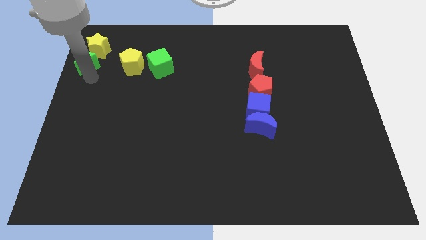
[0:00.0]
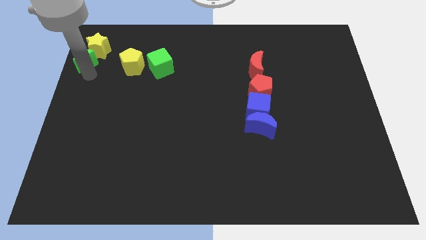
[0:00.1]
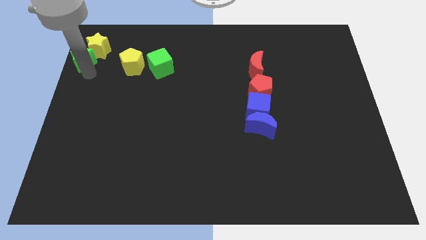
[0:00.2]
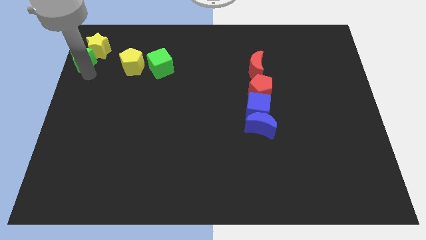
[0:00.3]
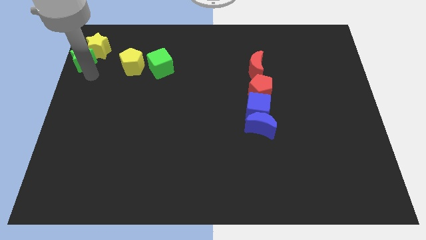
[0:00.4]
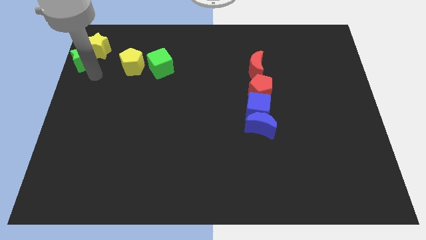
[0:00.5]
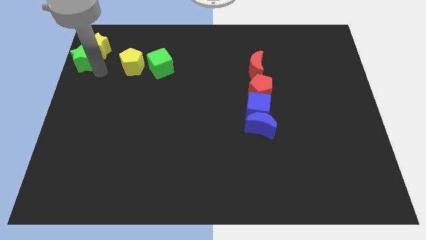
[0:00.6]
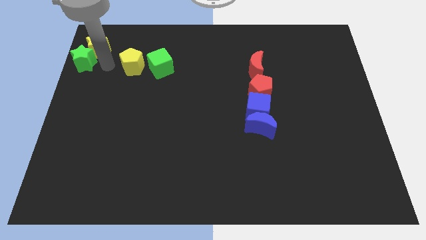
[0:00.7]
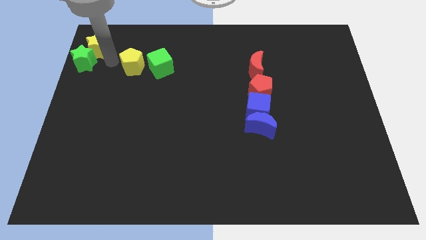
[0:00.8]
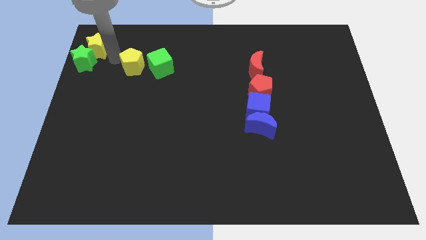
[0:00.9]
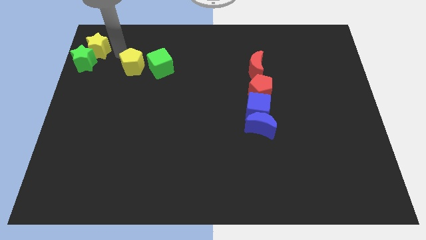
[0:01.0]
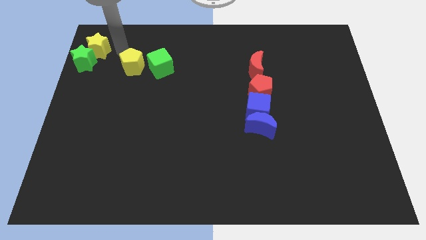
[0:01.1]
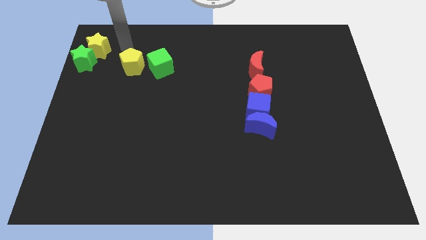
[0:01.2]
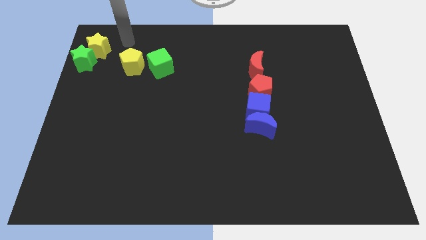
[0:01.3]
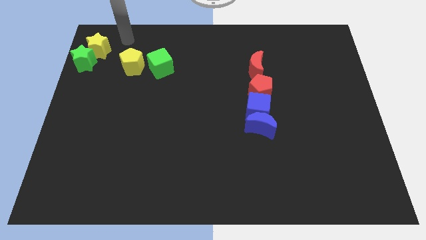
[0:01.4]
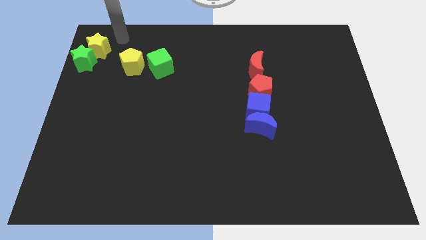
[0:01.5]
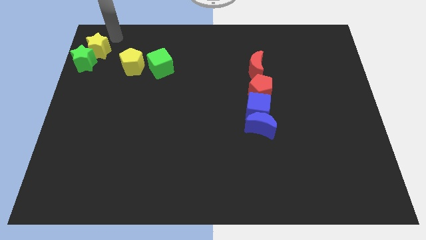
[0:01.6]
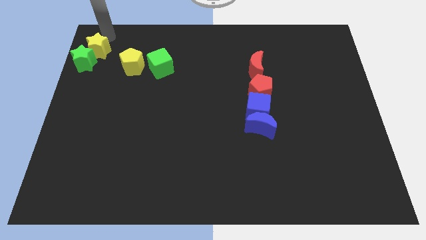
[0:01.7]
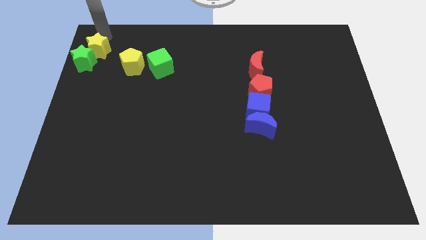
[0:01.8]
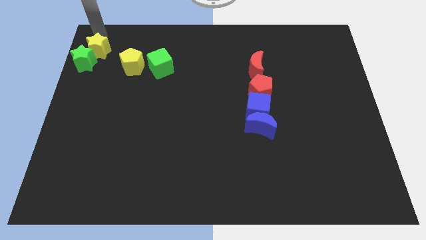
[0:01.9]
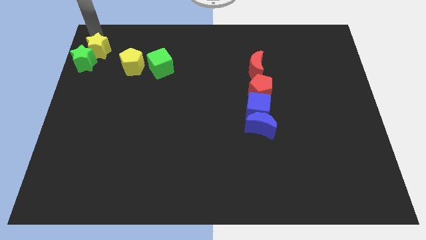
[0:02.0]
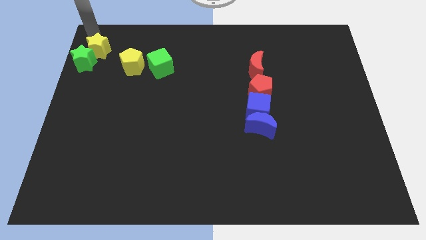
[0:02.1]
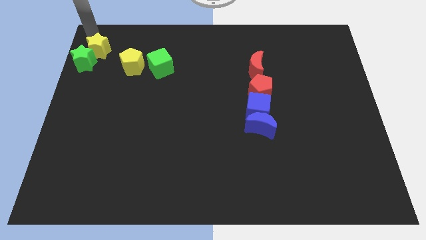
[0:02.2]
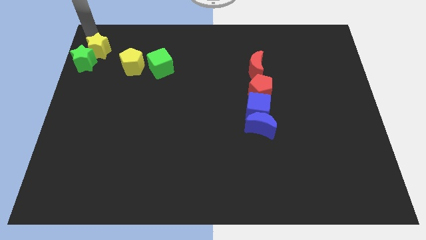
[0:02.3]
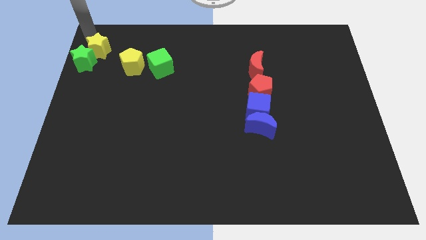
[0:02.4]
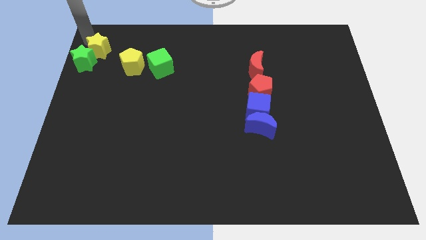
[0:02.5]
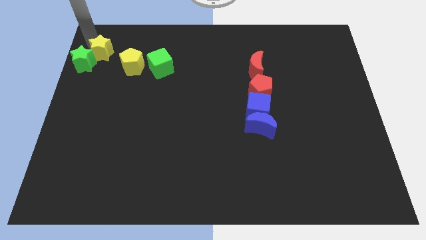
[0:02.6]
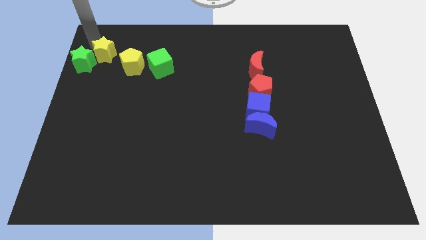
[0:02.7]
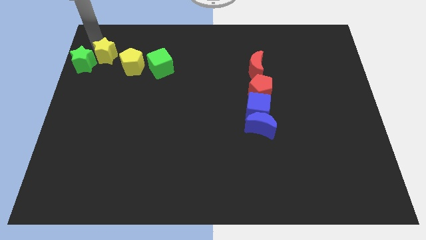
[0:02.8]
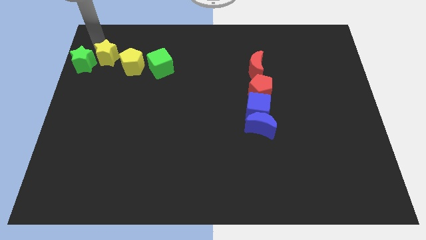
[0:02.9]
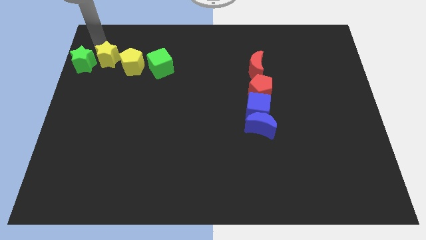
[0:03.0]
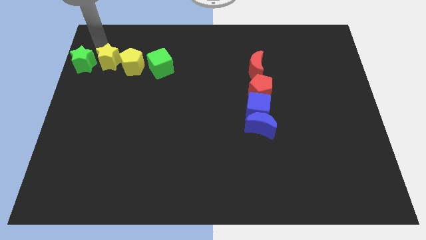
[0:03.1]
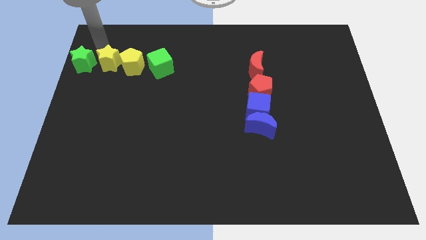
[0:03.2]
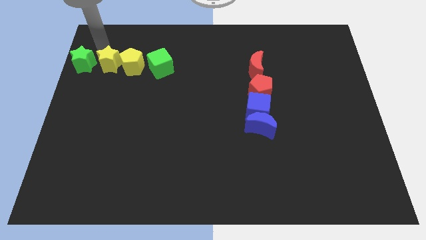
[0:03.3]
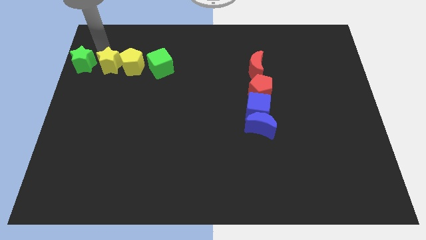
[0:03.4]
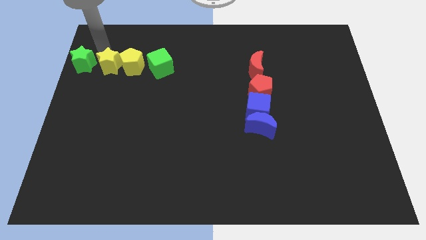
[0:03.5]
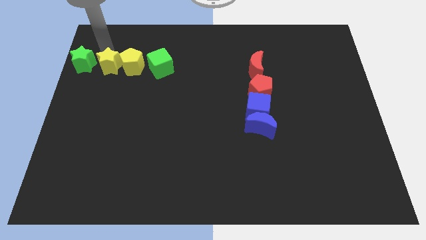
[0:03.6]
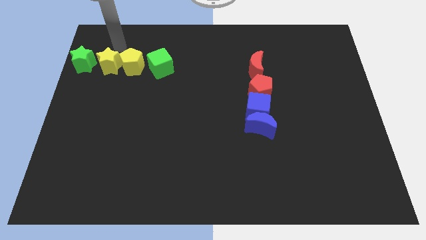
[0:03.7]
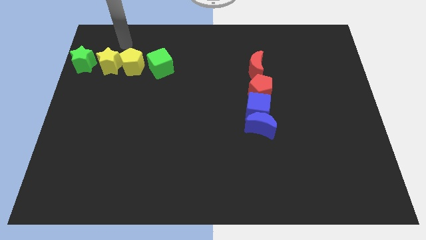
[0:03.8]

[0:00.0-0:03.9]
drag the yellow star towards the left of the yellow pentagon

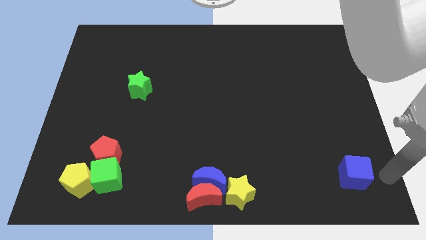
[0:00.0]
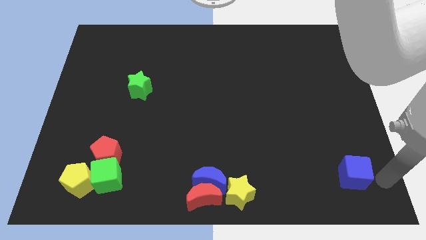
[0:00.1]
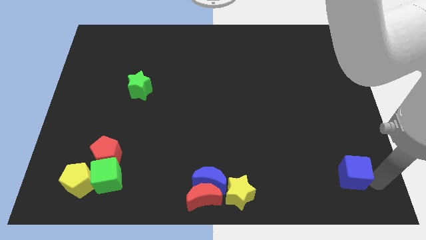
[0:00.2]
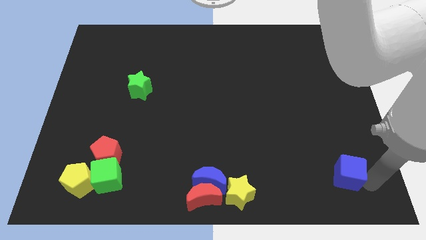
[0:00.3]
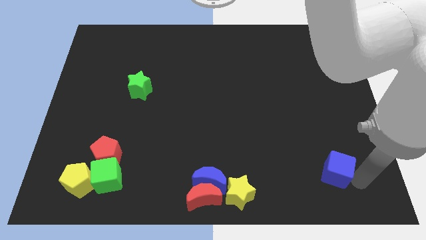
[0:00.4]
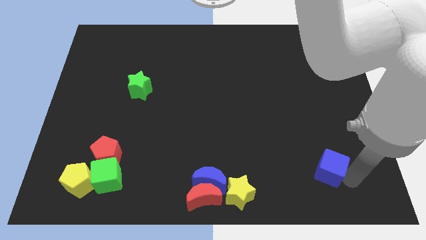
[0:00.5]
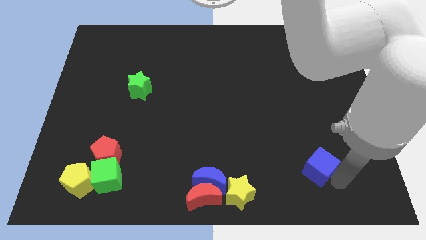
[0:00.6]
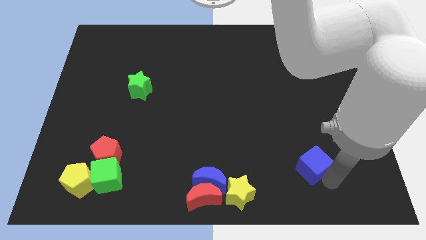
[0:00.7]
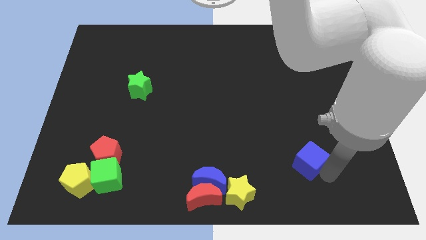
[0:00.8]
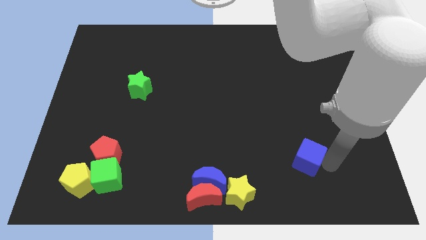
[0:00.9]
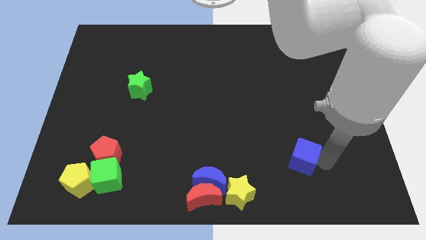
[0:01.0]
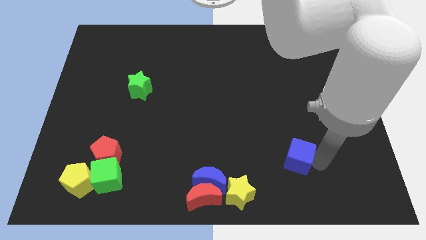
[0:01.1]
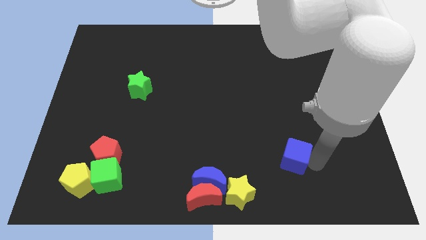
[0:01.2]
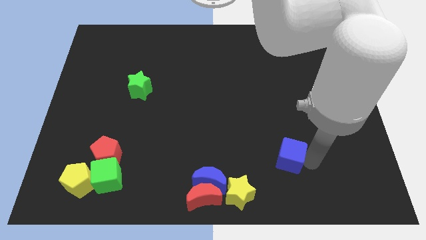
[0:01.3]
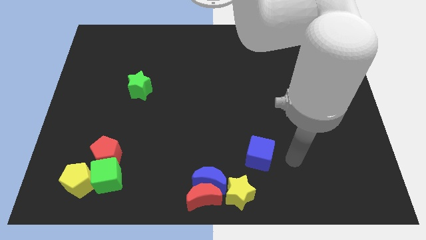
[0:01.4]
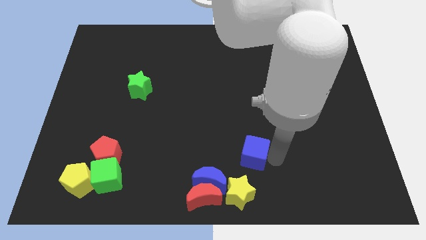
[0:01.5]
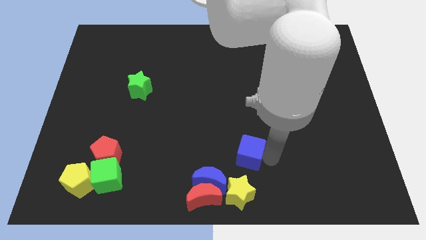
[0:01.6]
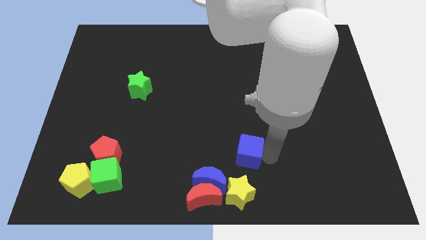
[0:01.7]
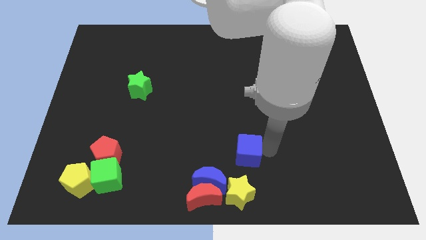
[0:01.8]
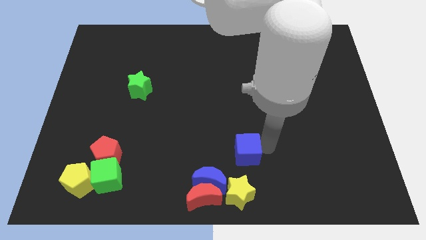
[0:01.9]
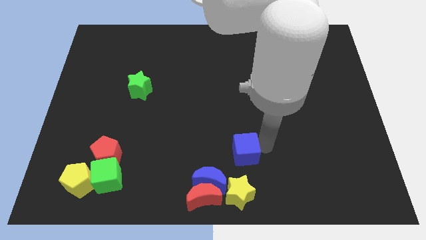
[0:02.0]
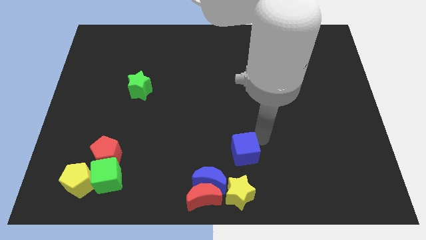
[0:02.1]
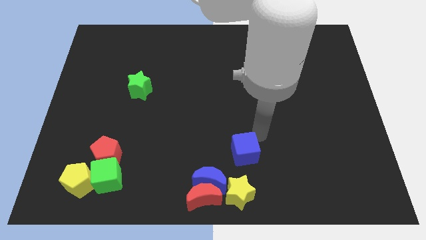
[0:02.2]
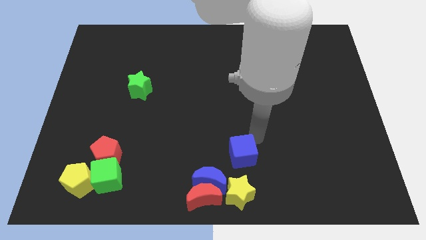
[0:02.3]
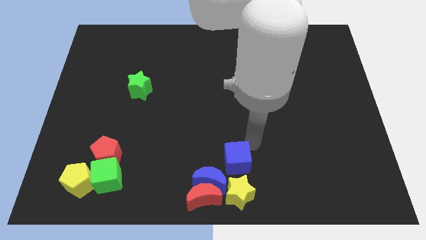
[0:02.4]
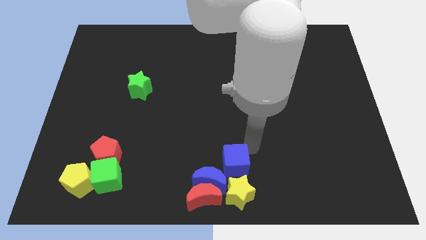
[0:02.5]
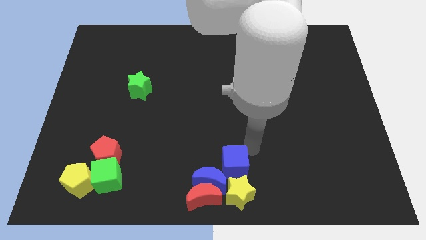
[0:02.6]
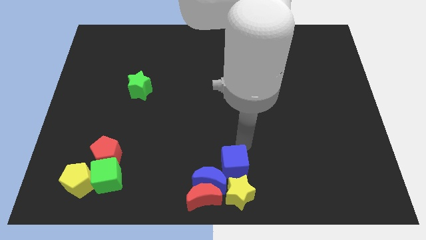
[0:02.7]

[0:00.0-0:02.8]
place the blue cube on top of yellow star

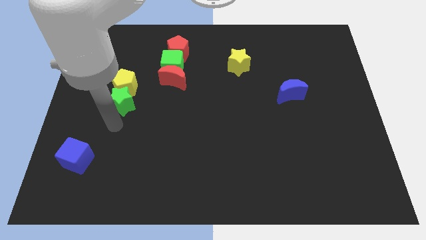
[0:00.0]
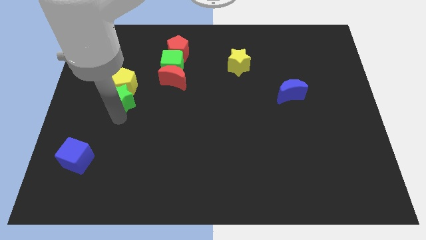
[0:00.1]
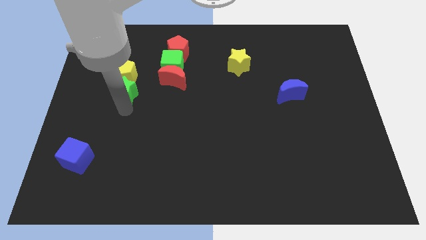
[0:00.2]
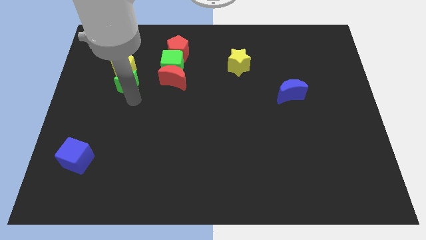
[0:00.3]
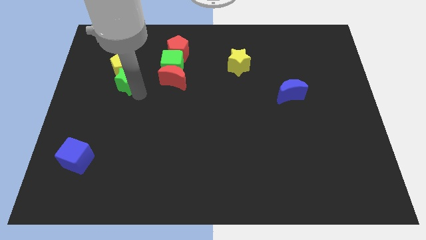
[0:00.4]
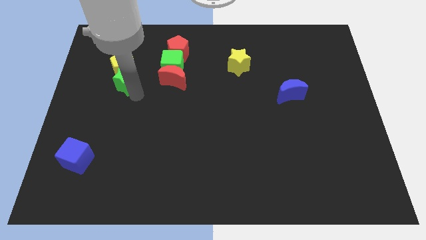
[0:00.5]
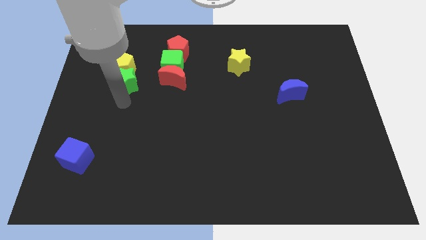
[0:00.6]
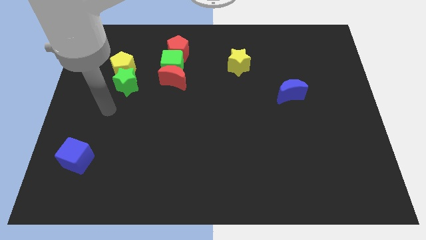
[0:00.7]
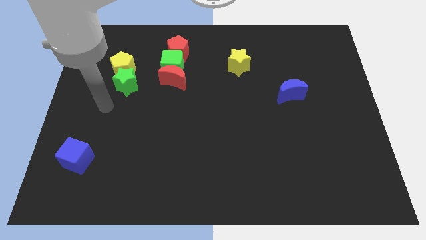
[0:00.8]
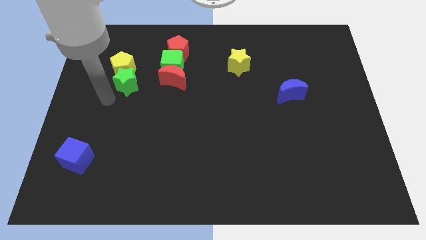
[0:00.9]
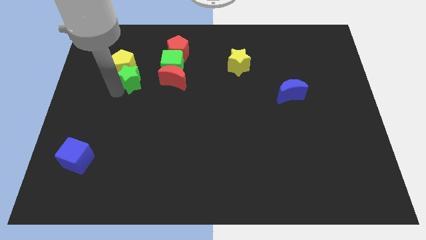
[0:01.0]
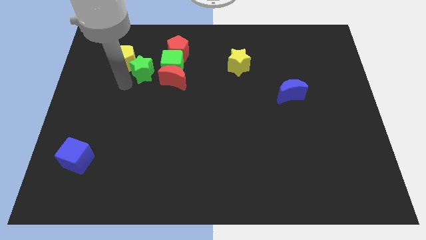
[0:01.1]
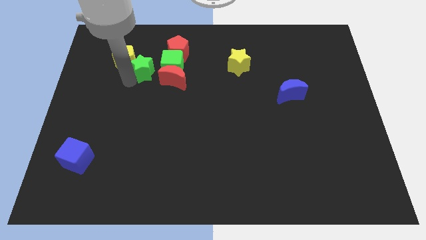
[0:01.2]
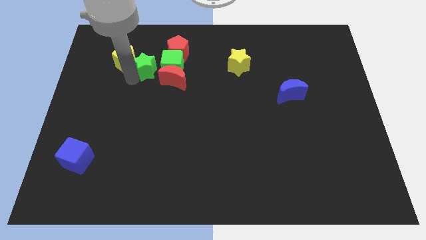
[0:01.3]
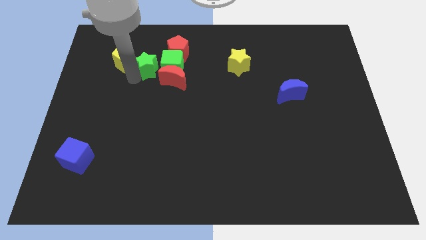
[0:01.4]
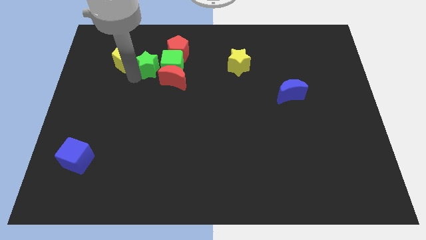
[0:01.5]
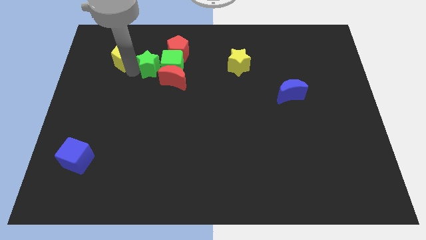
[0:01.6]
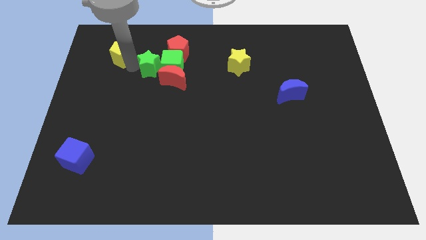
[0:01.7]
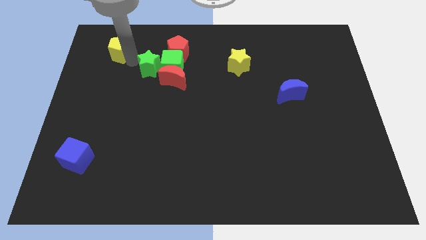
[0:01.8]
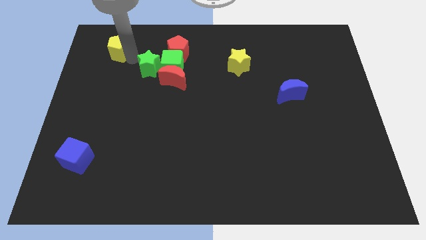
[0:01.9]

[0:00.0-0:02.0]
separate green star and the yellow pentagon

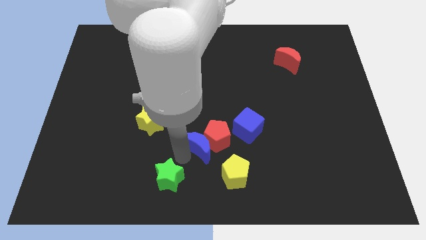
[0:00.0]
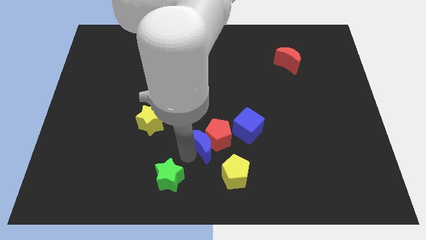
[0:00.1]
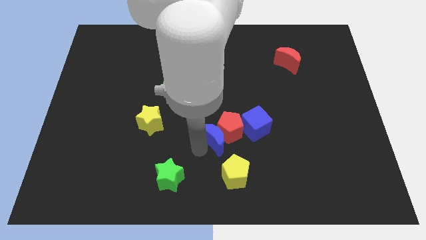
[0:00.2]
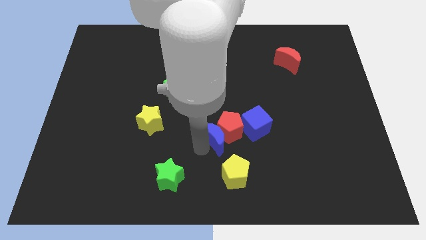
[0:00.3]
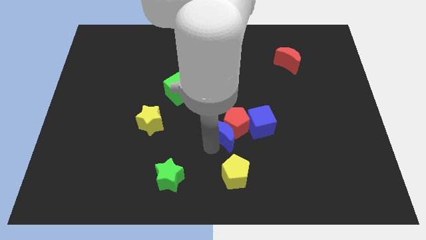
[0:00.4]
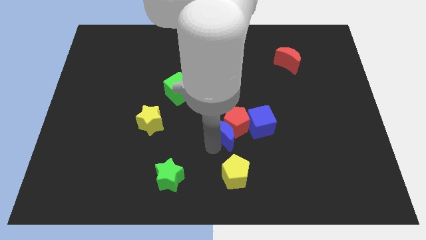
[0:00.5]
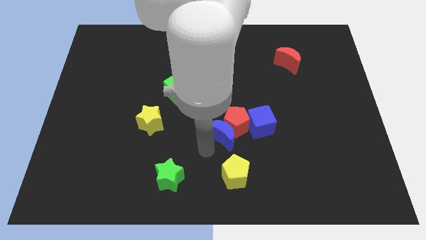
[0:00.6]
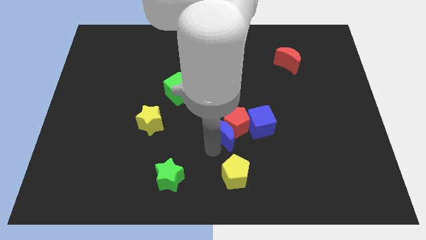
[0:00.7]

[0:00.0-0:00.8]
push blue crescent above yellow pentagon
